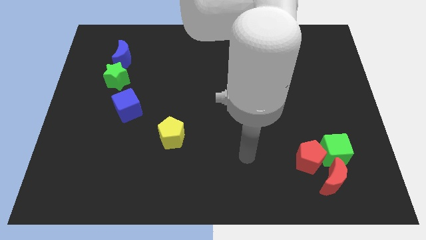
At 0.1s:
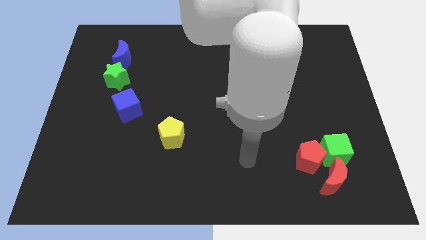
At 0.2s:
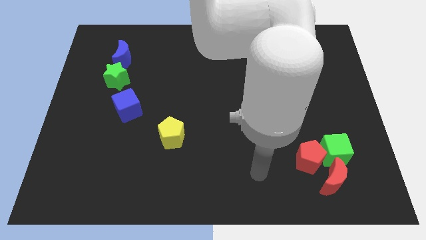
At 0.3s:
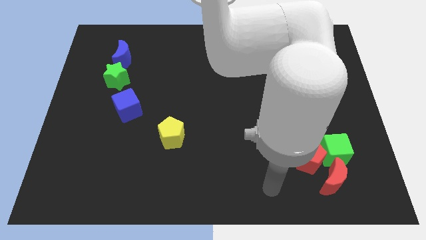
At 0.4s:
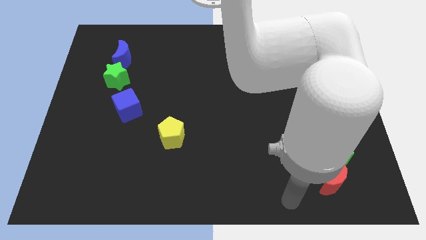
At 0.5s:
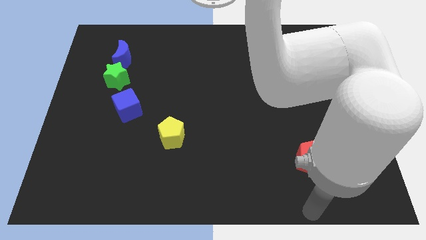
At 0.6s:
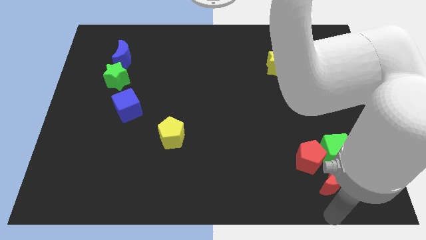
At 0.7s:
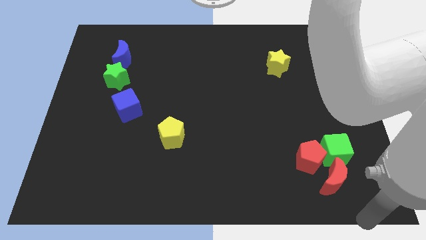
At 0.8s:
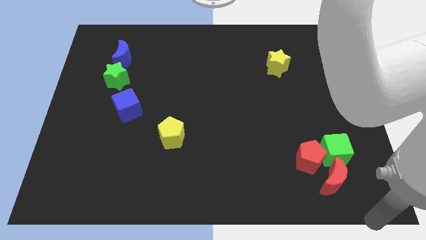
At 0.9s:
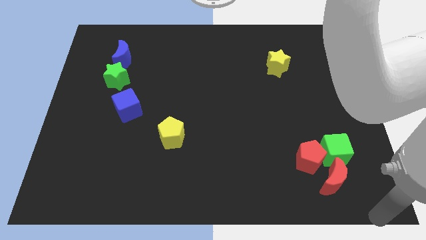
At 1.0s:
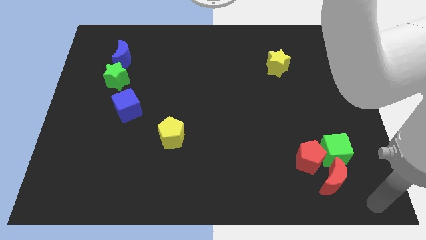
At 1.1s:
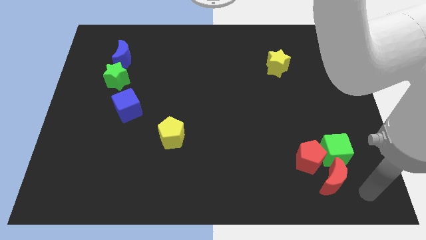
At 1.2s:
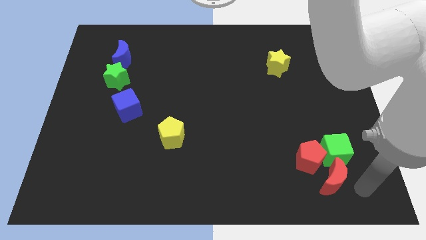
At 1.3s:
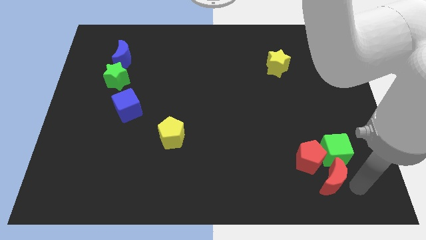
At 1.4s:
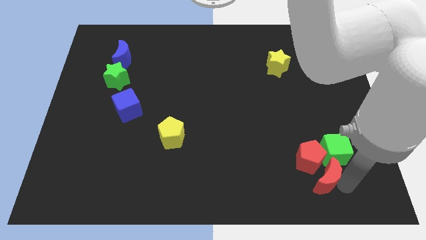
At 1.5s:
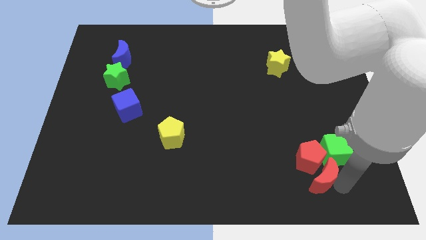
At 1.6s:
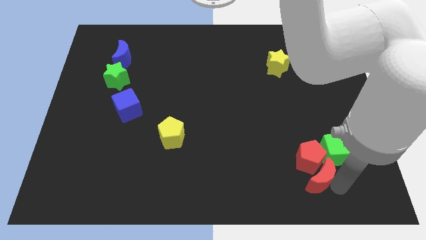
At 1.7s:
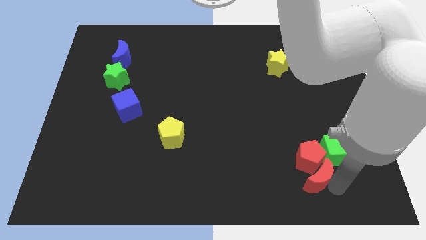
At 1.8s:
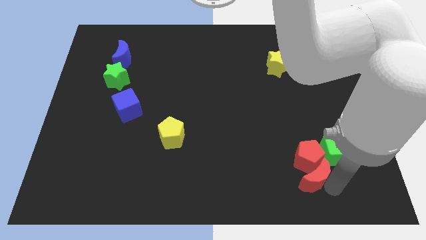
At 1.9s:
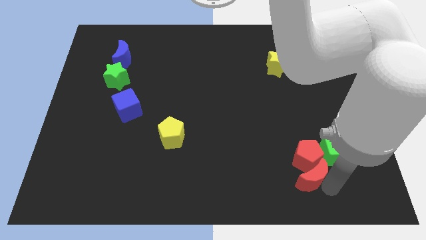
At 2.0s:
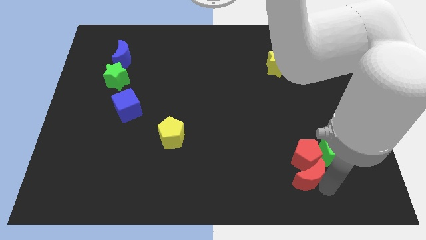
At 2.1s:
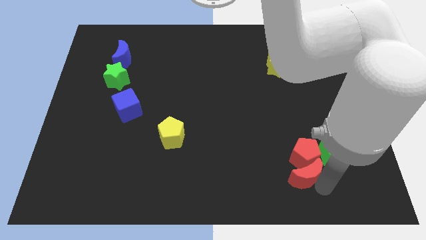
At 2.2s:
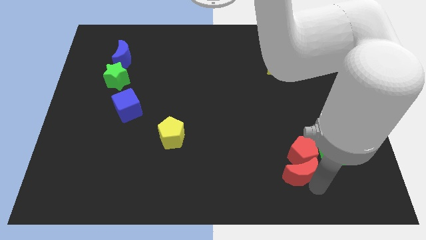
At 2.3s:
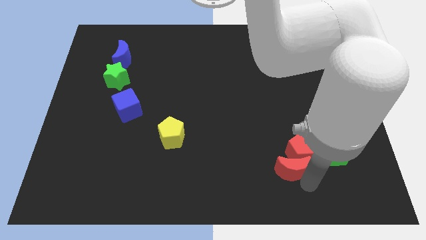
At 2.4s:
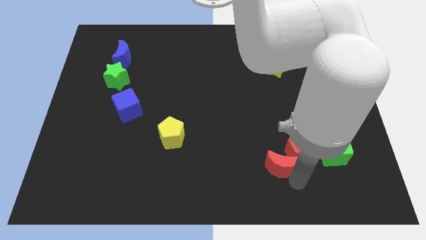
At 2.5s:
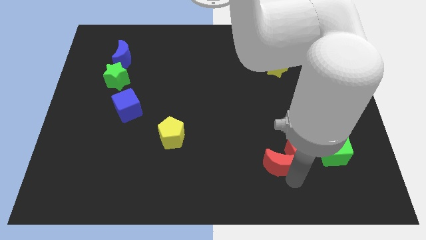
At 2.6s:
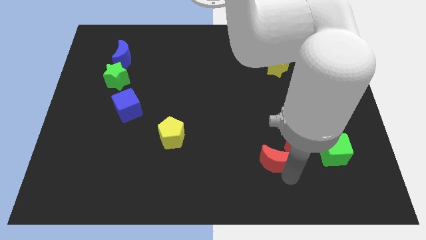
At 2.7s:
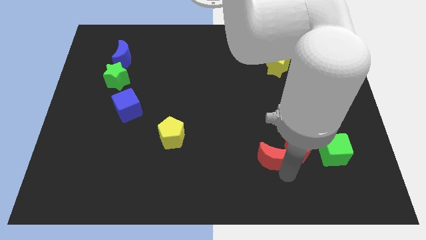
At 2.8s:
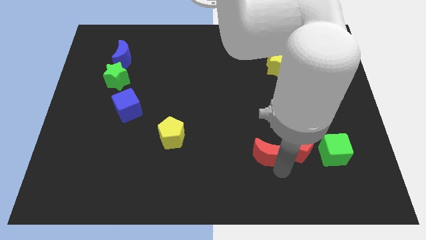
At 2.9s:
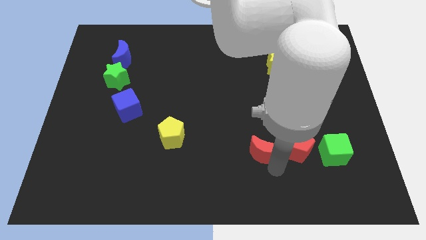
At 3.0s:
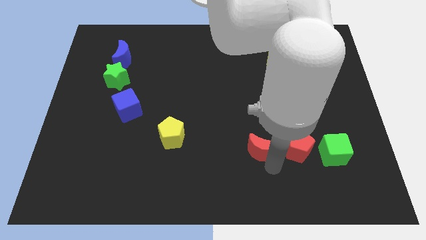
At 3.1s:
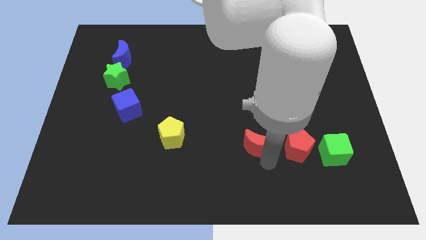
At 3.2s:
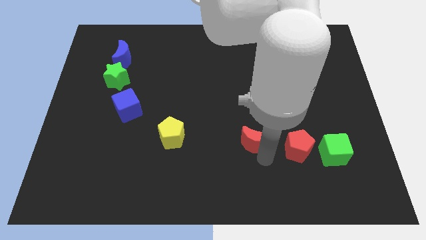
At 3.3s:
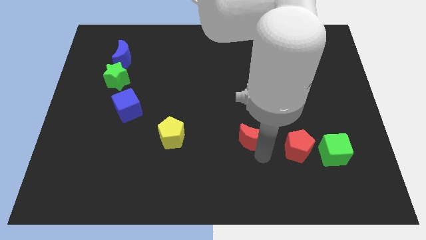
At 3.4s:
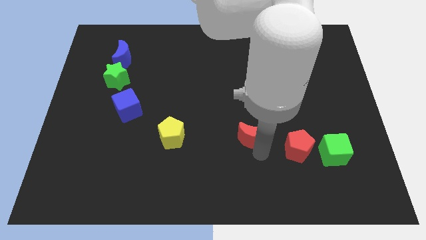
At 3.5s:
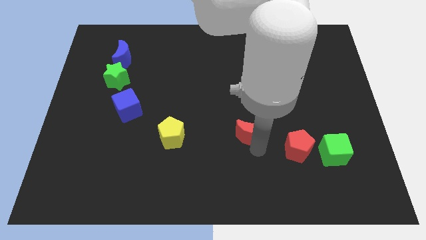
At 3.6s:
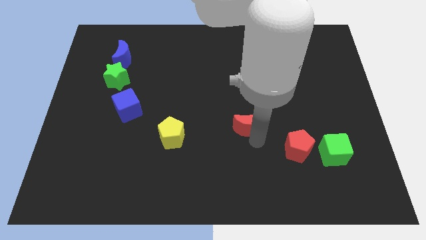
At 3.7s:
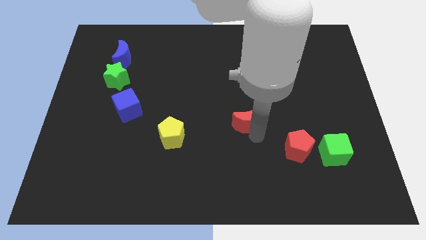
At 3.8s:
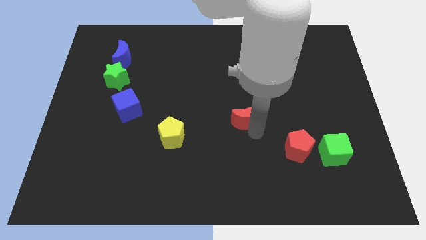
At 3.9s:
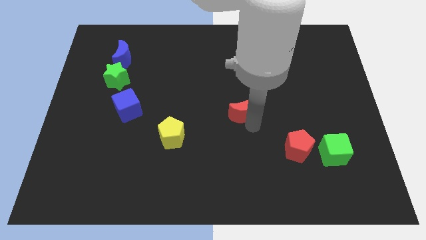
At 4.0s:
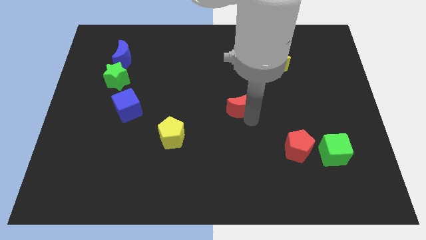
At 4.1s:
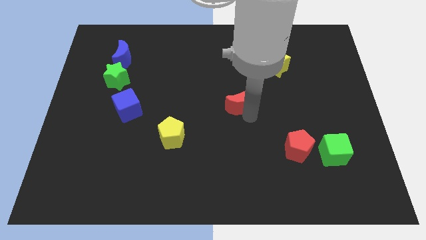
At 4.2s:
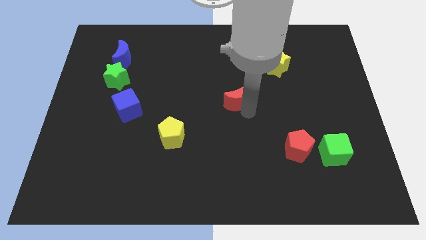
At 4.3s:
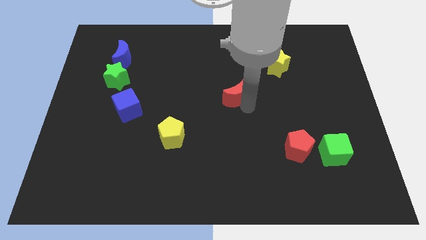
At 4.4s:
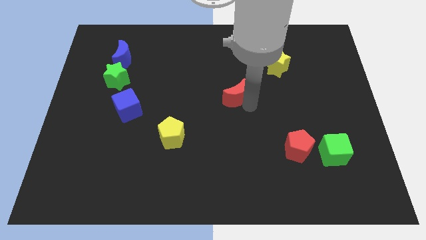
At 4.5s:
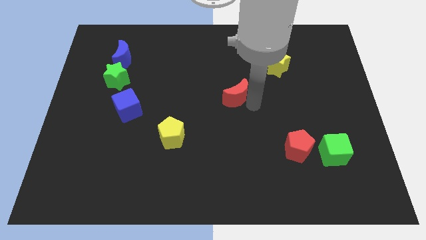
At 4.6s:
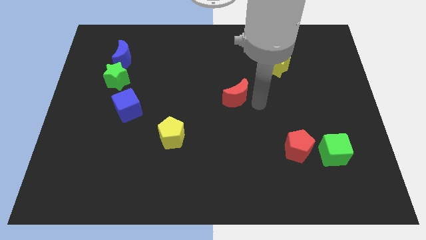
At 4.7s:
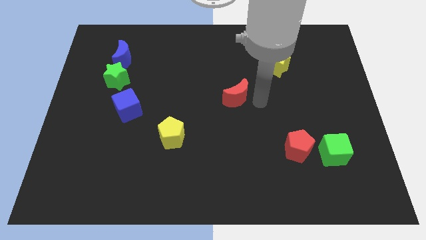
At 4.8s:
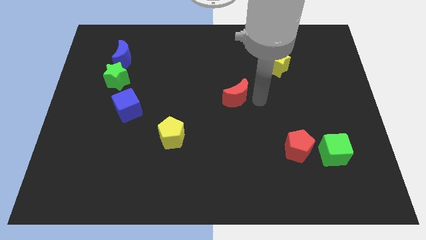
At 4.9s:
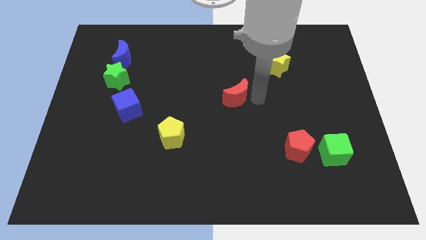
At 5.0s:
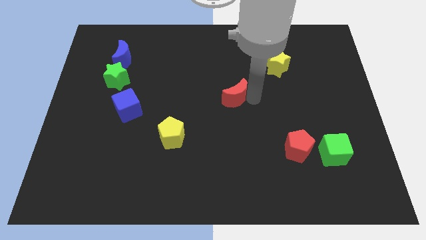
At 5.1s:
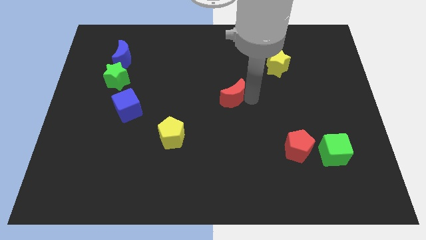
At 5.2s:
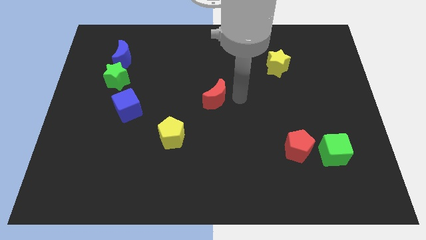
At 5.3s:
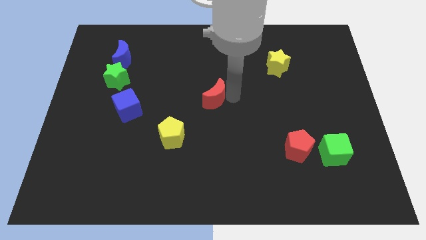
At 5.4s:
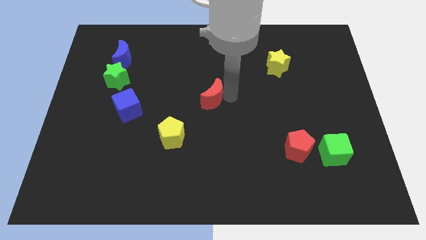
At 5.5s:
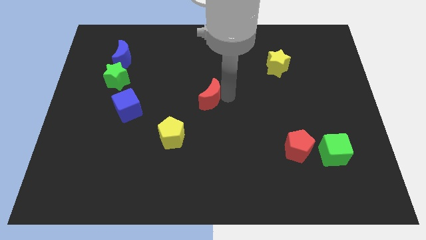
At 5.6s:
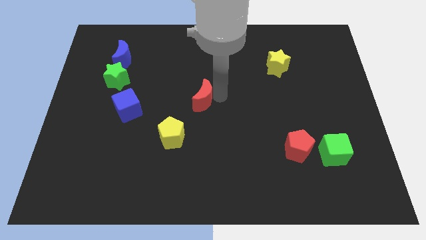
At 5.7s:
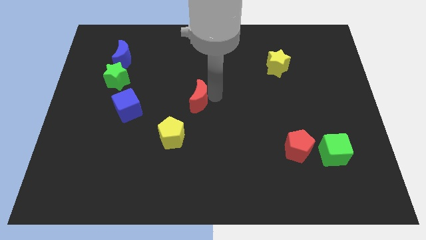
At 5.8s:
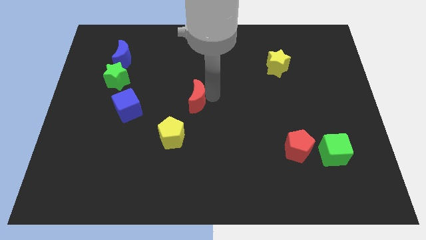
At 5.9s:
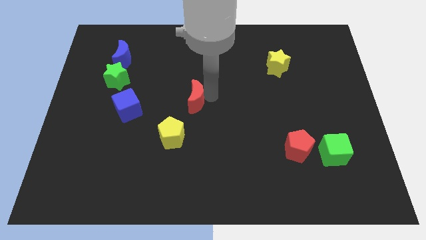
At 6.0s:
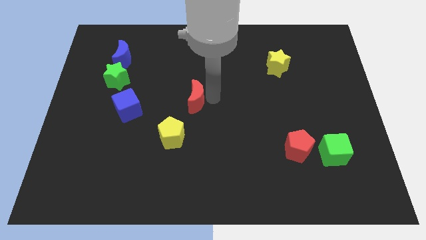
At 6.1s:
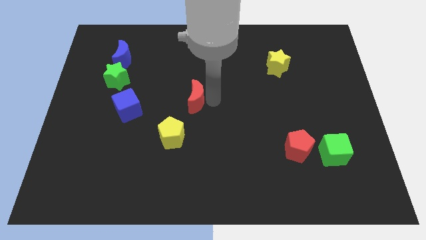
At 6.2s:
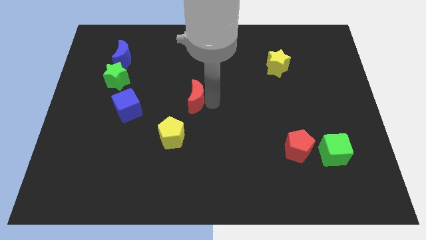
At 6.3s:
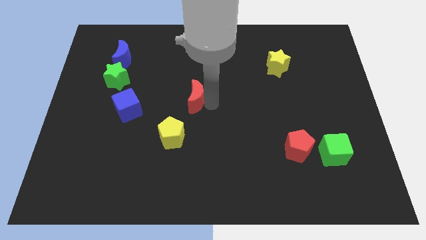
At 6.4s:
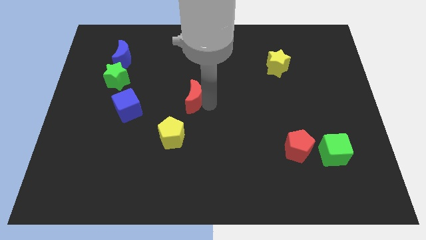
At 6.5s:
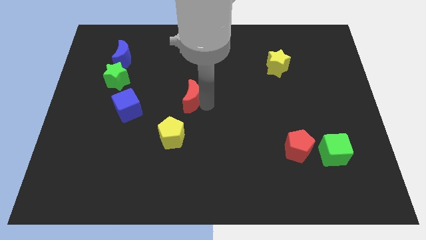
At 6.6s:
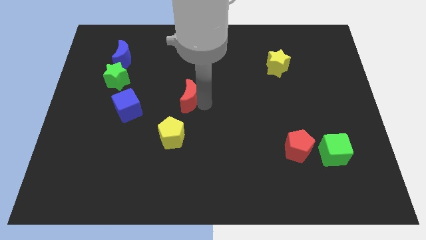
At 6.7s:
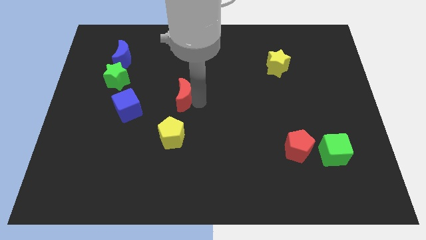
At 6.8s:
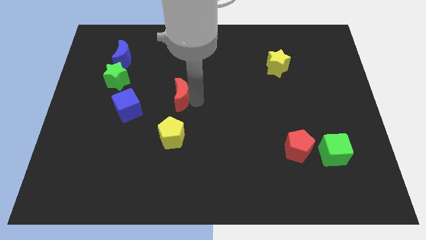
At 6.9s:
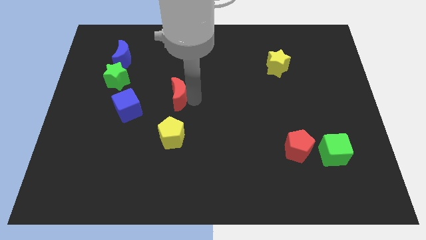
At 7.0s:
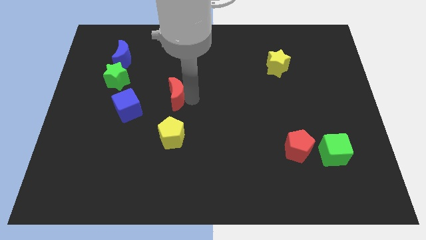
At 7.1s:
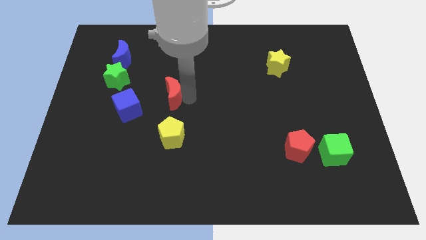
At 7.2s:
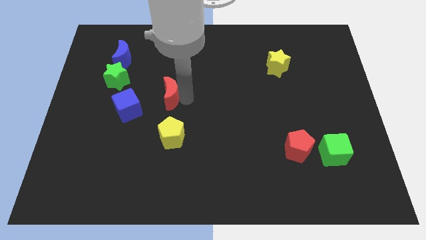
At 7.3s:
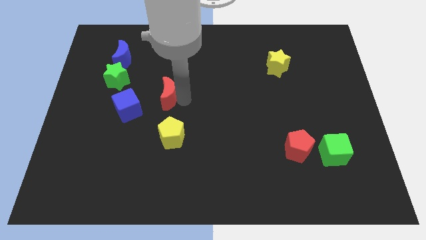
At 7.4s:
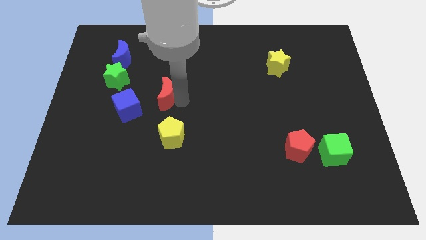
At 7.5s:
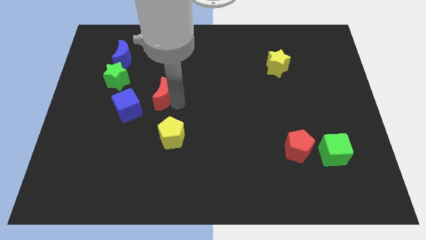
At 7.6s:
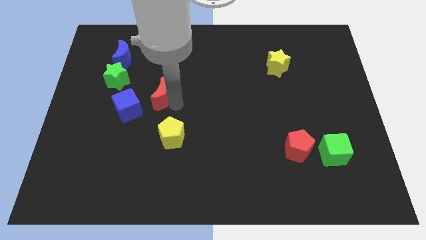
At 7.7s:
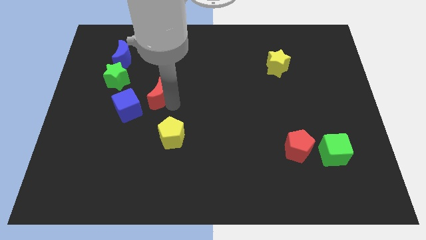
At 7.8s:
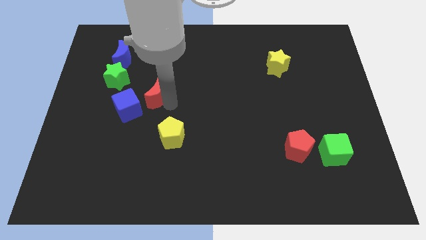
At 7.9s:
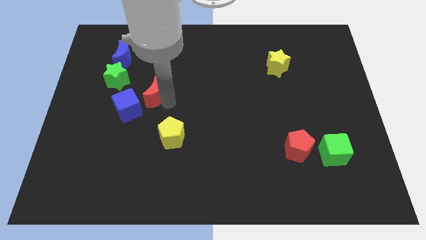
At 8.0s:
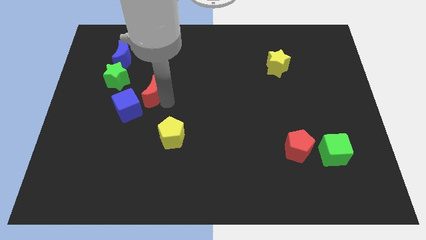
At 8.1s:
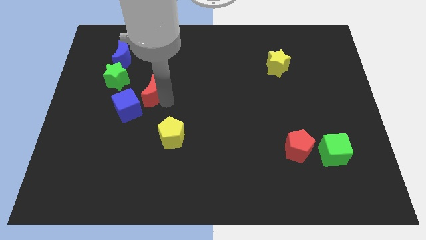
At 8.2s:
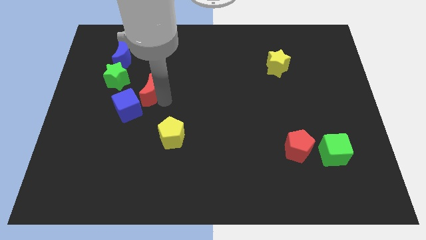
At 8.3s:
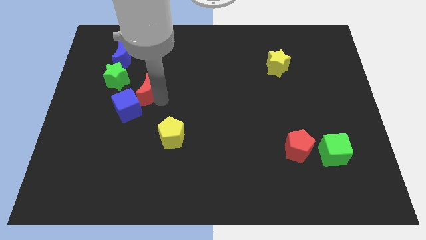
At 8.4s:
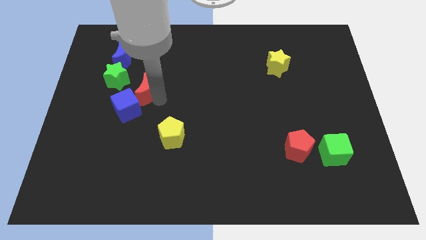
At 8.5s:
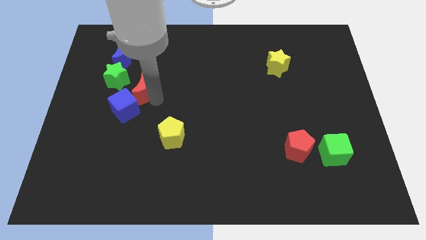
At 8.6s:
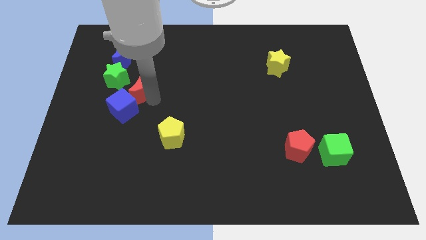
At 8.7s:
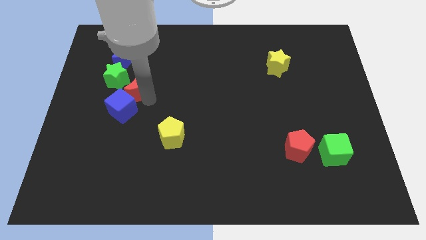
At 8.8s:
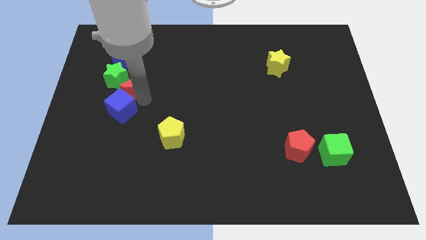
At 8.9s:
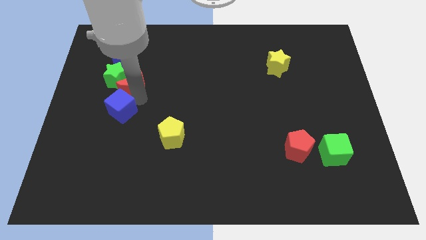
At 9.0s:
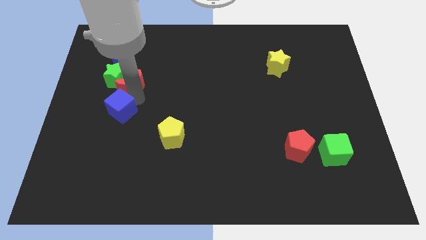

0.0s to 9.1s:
push the red moon next to the green star
